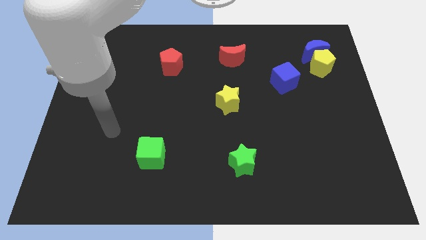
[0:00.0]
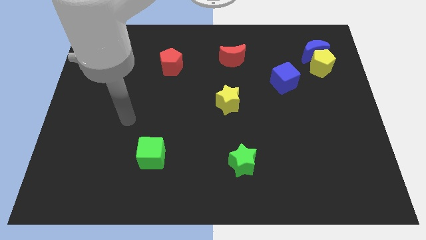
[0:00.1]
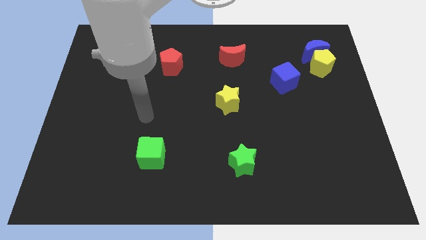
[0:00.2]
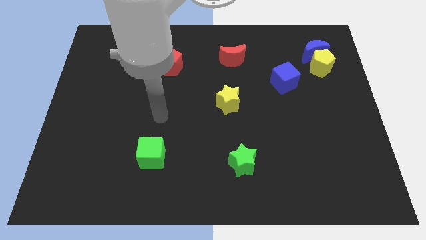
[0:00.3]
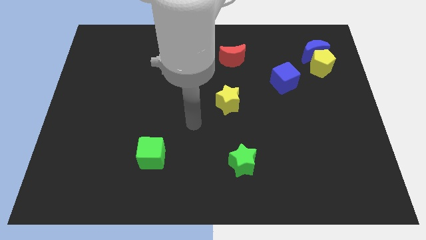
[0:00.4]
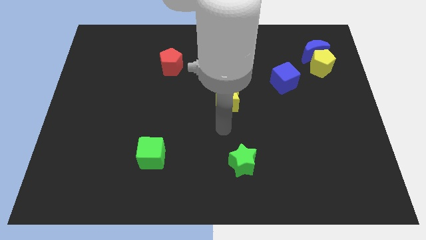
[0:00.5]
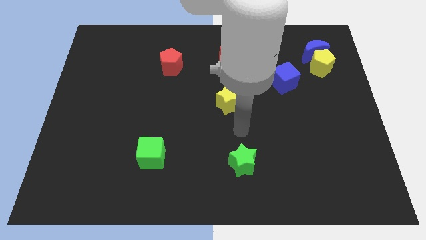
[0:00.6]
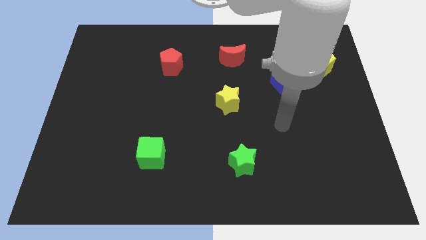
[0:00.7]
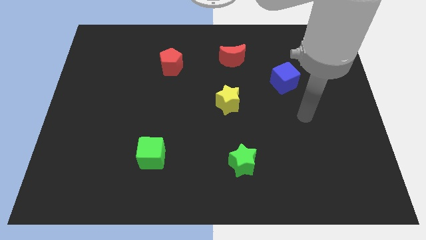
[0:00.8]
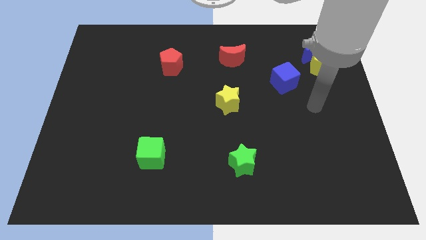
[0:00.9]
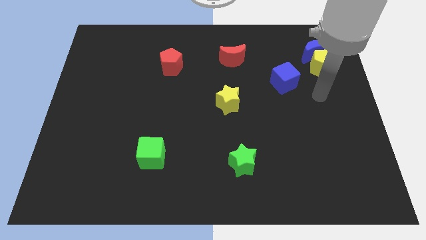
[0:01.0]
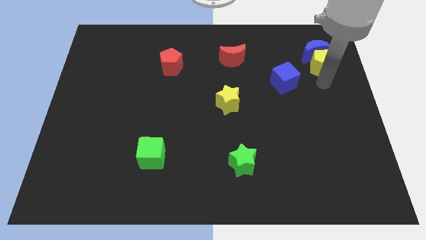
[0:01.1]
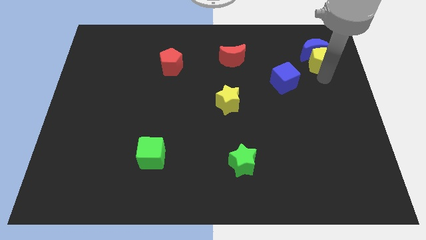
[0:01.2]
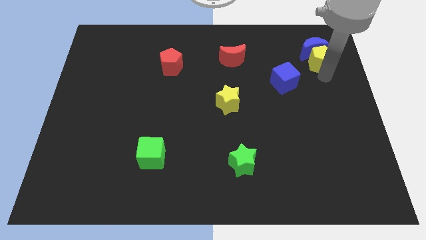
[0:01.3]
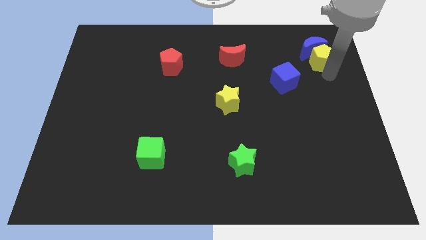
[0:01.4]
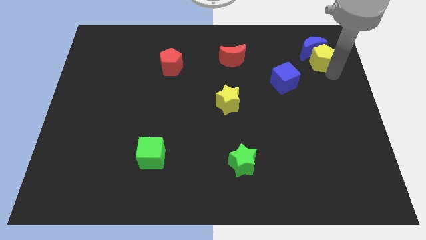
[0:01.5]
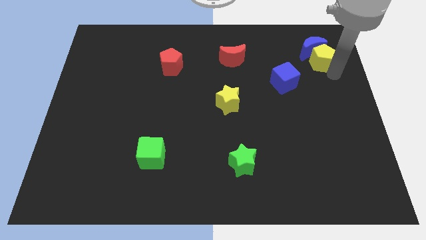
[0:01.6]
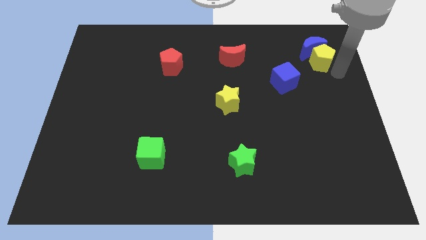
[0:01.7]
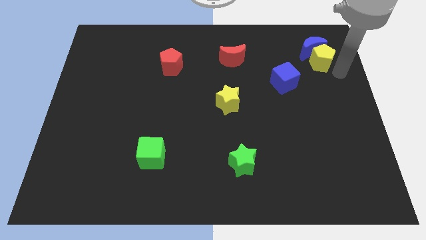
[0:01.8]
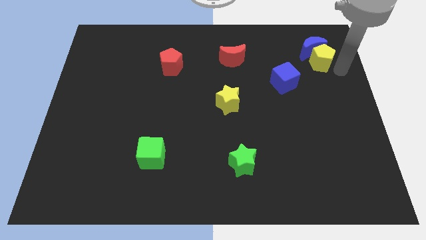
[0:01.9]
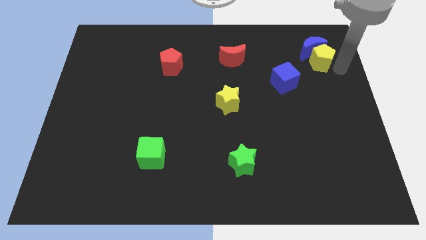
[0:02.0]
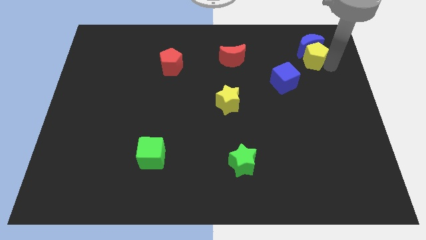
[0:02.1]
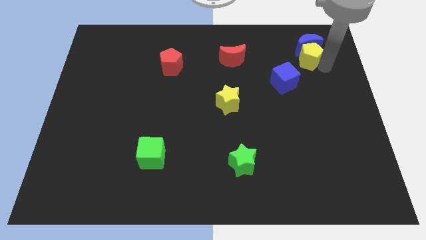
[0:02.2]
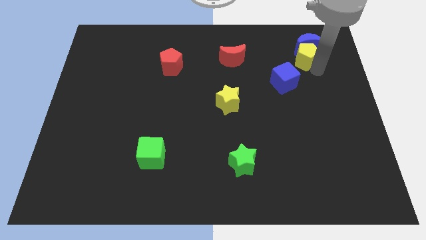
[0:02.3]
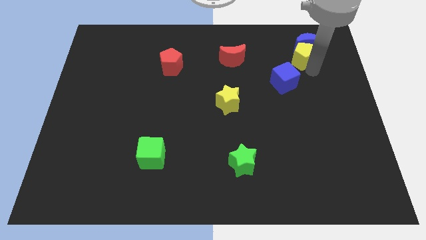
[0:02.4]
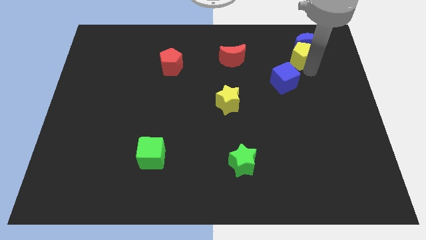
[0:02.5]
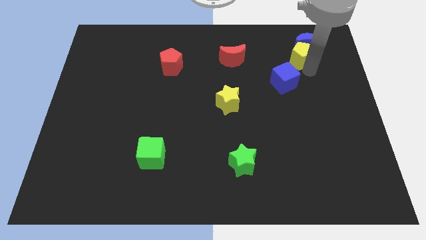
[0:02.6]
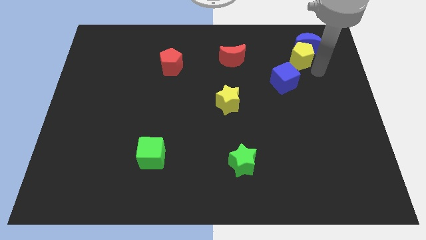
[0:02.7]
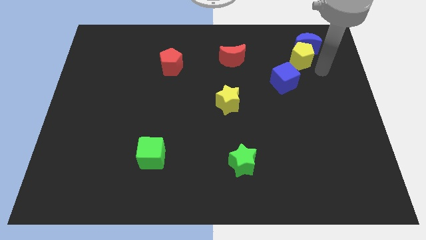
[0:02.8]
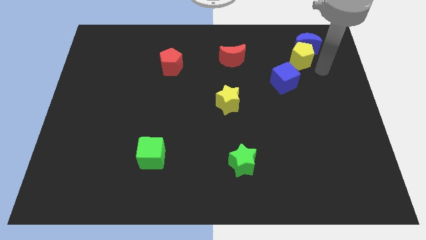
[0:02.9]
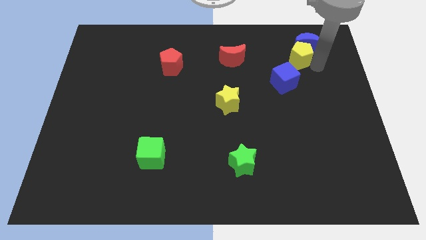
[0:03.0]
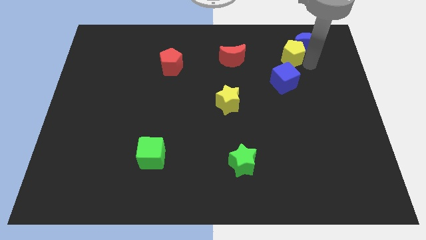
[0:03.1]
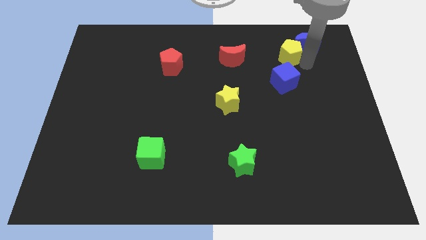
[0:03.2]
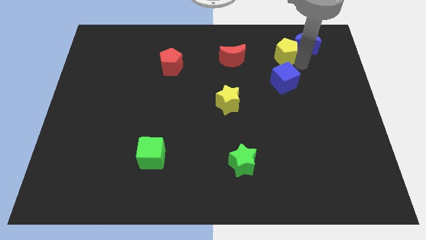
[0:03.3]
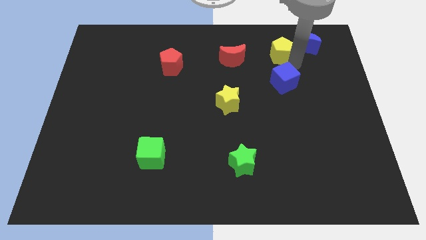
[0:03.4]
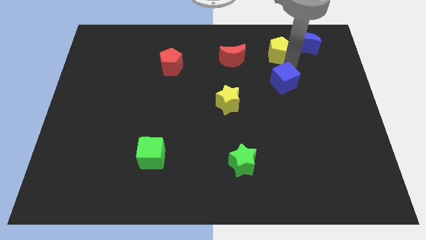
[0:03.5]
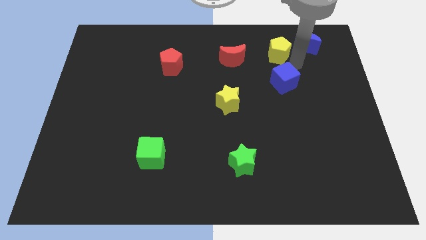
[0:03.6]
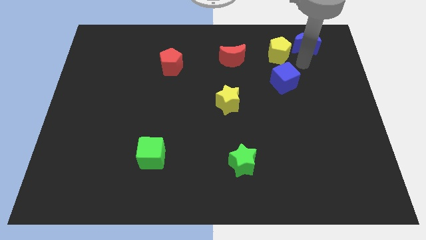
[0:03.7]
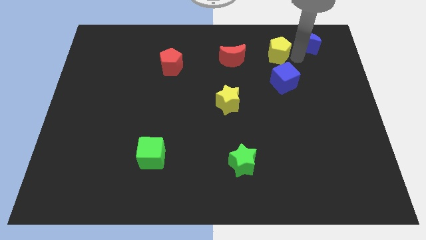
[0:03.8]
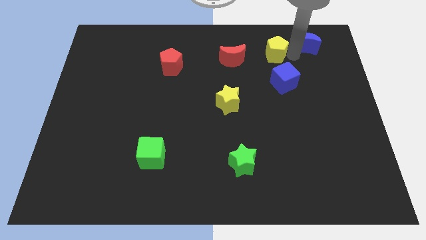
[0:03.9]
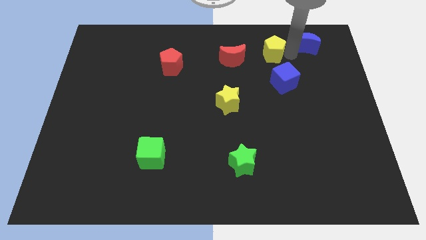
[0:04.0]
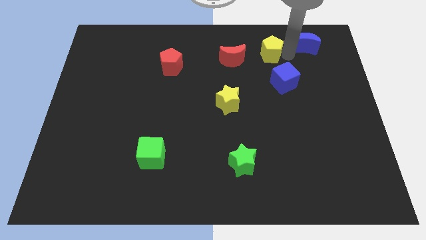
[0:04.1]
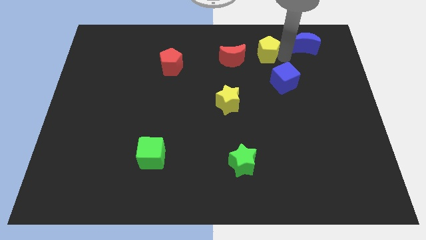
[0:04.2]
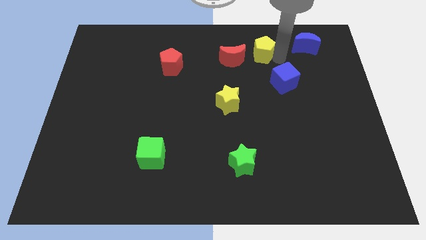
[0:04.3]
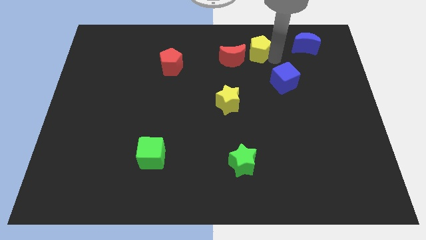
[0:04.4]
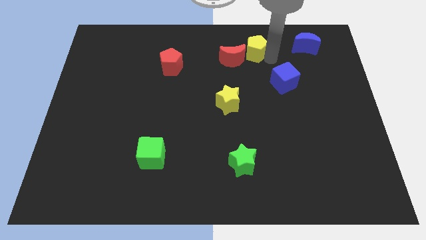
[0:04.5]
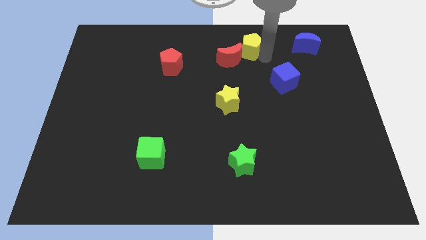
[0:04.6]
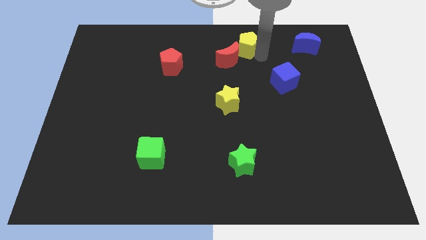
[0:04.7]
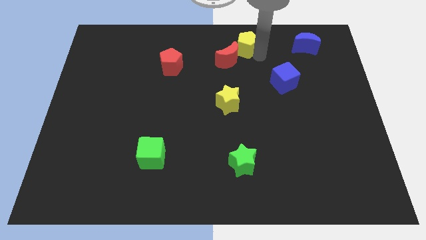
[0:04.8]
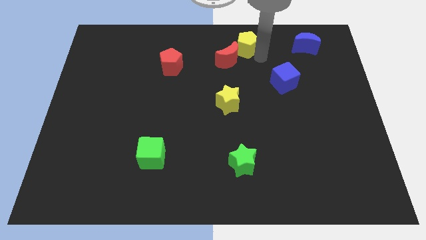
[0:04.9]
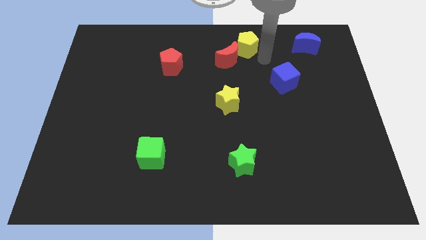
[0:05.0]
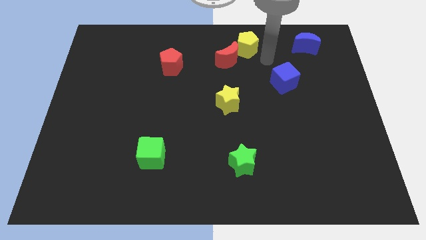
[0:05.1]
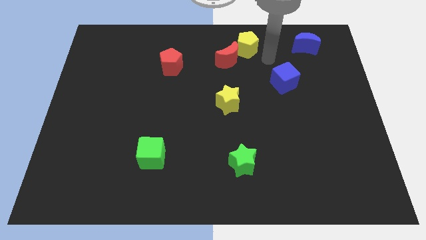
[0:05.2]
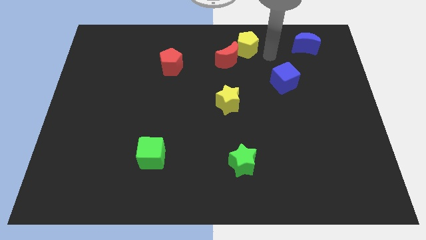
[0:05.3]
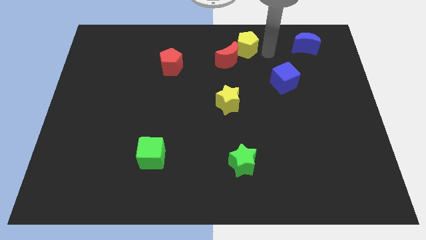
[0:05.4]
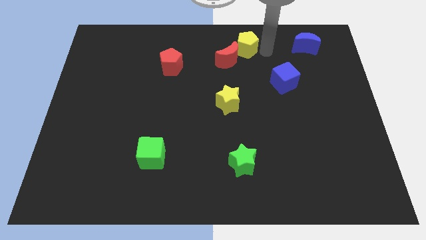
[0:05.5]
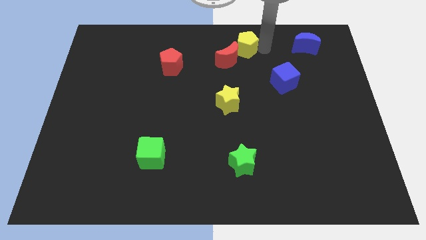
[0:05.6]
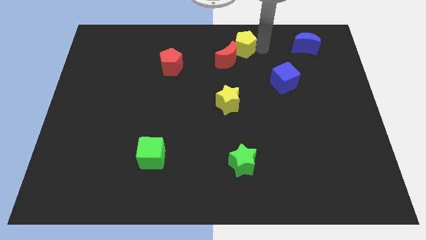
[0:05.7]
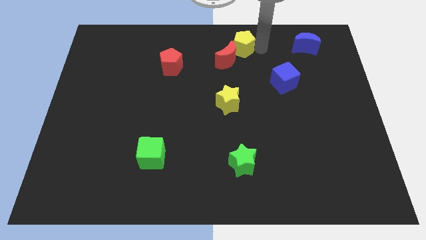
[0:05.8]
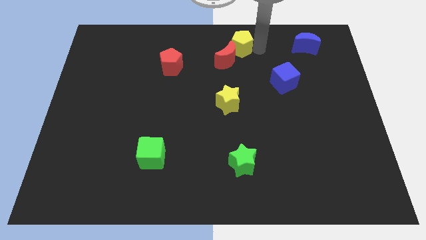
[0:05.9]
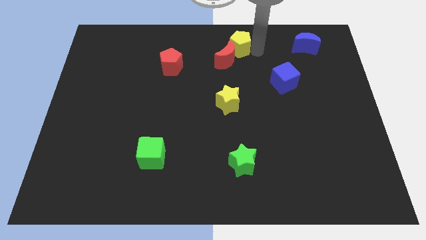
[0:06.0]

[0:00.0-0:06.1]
move the yellow pentagon close to the red moon

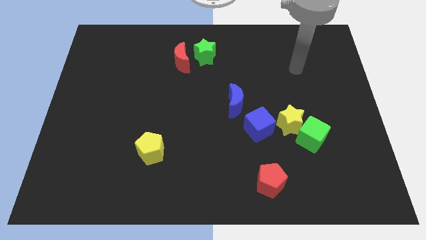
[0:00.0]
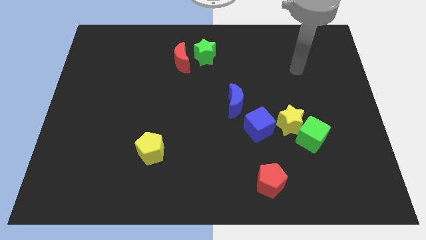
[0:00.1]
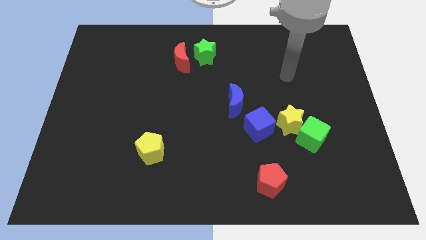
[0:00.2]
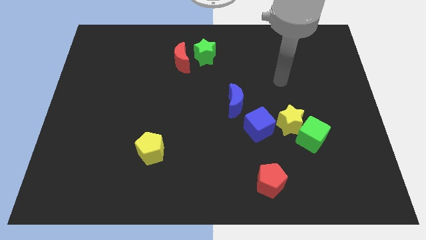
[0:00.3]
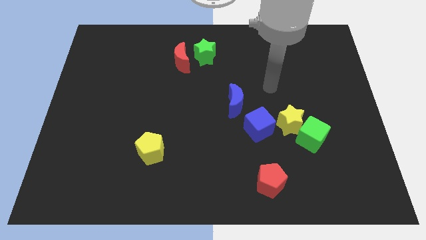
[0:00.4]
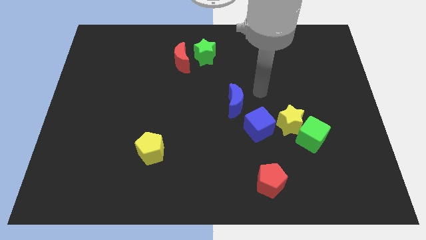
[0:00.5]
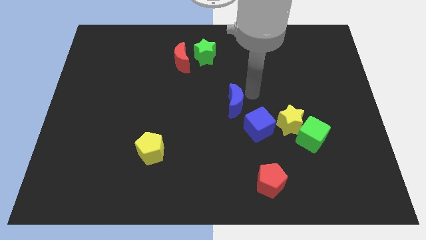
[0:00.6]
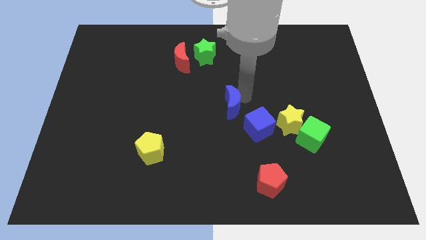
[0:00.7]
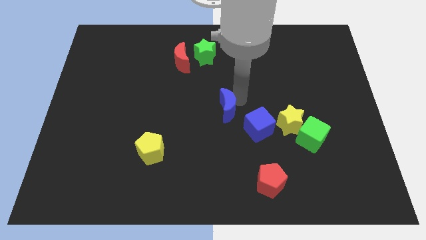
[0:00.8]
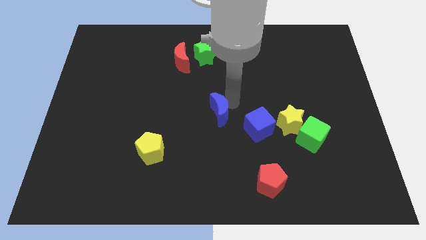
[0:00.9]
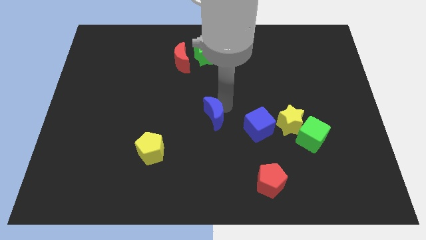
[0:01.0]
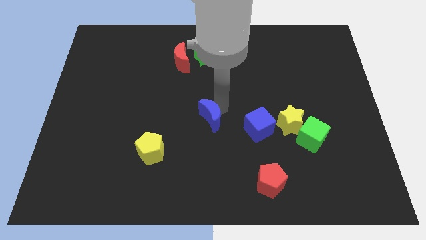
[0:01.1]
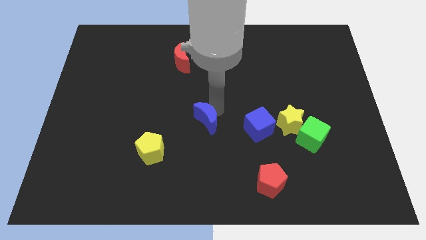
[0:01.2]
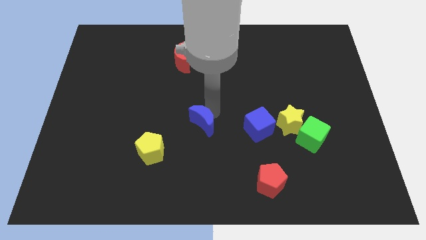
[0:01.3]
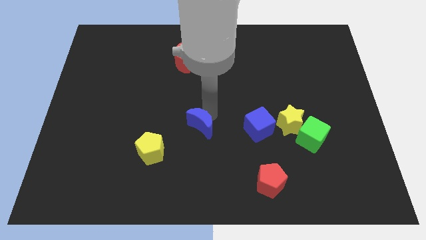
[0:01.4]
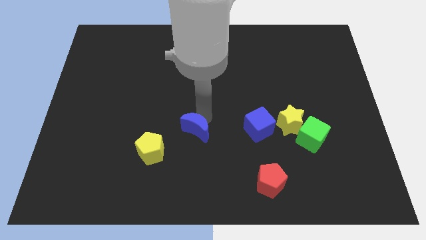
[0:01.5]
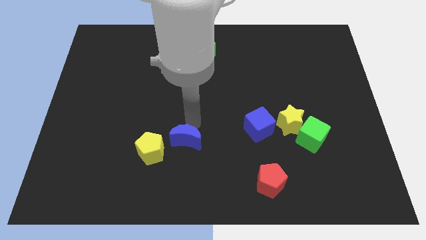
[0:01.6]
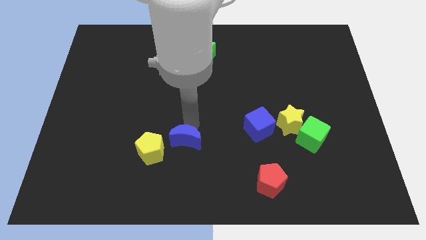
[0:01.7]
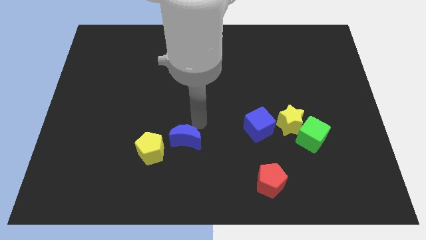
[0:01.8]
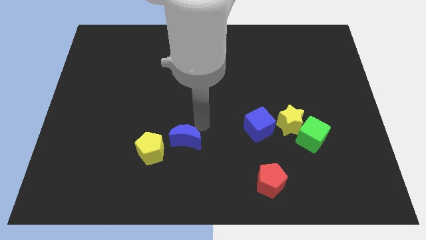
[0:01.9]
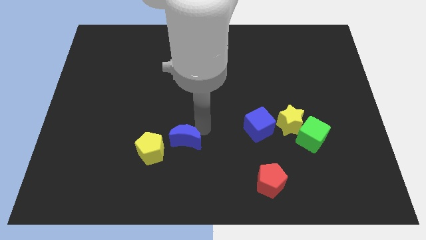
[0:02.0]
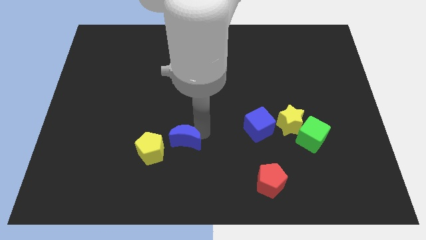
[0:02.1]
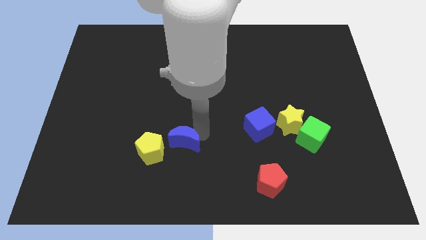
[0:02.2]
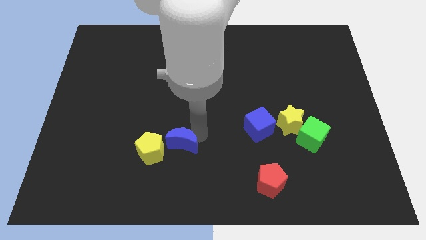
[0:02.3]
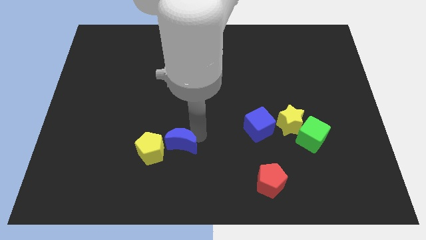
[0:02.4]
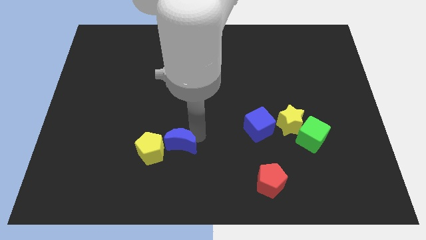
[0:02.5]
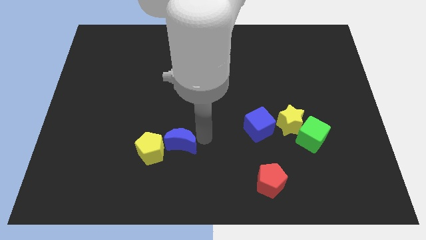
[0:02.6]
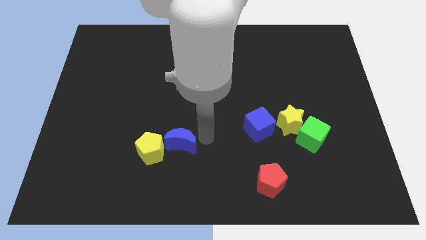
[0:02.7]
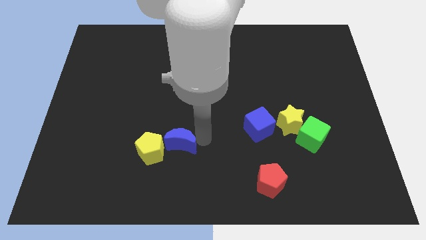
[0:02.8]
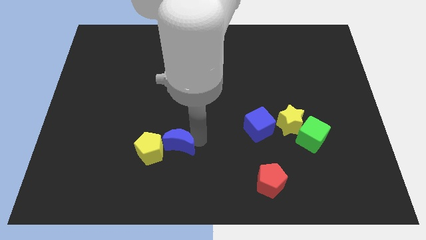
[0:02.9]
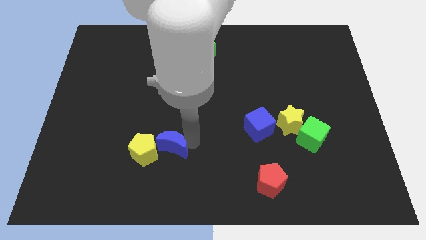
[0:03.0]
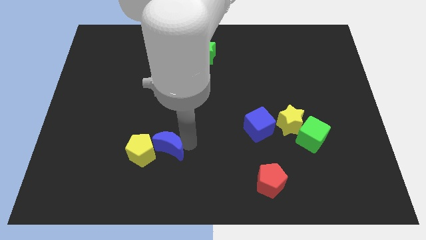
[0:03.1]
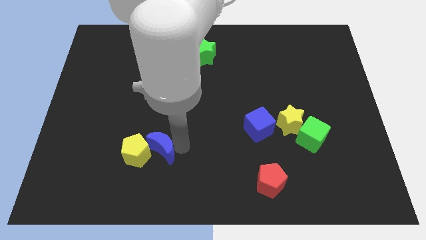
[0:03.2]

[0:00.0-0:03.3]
push the blue moon close to the yellow pentagon
